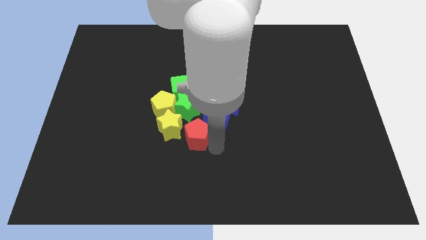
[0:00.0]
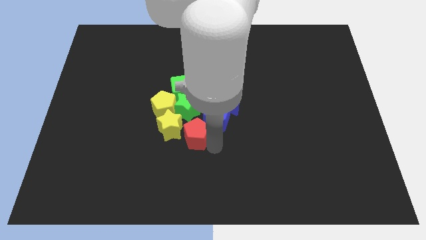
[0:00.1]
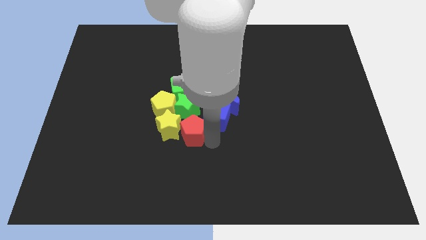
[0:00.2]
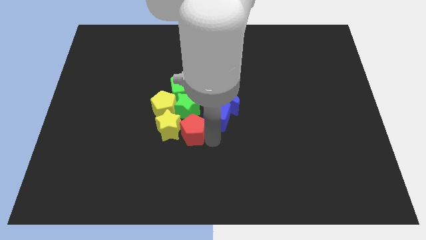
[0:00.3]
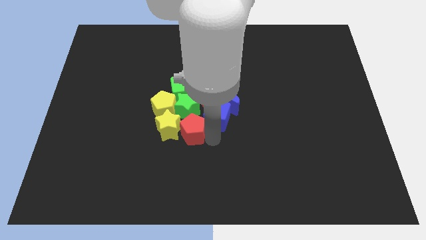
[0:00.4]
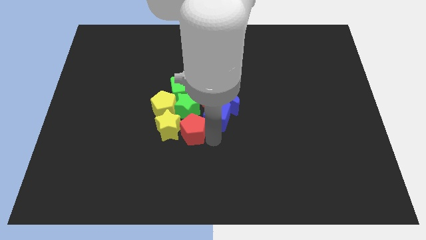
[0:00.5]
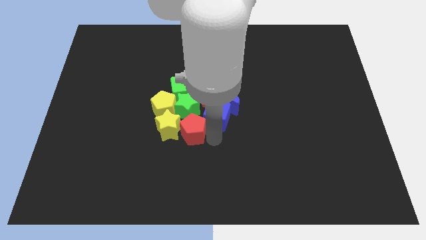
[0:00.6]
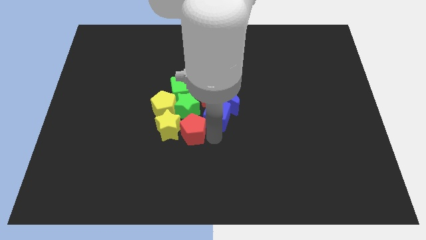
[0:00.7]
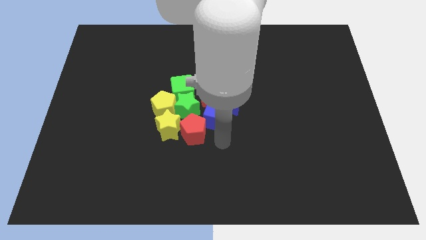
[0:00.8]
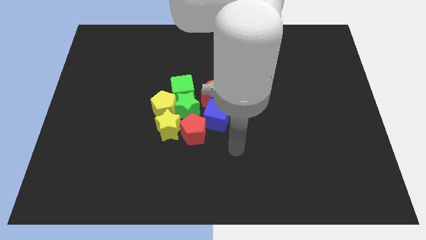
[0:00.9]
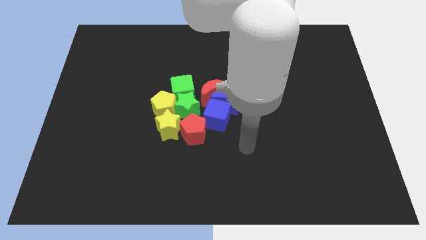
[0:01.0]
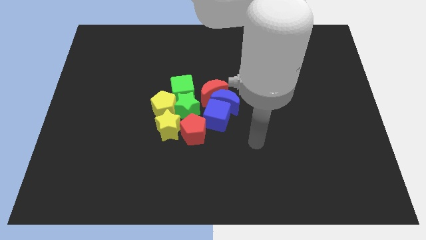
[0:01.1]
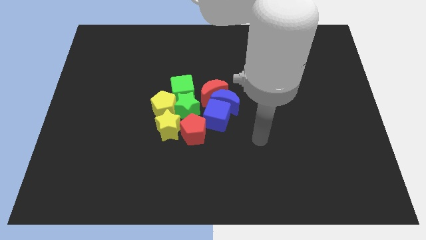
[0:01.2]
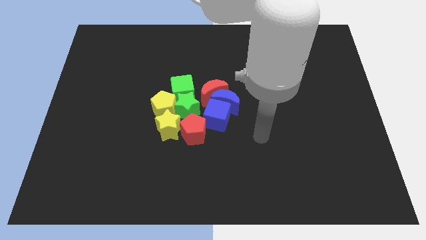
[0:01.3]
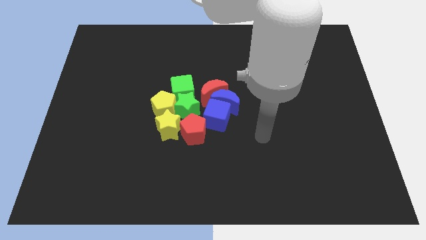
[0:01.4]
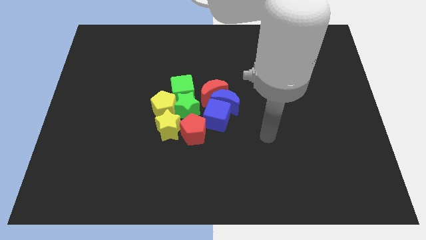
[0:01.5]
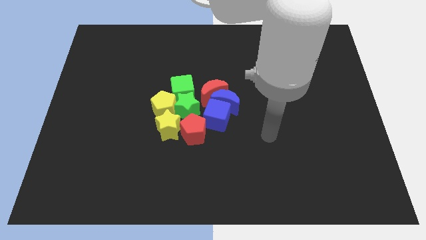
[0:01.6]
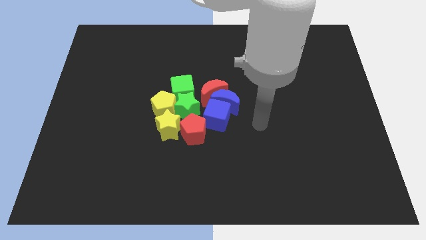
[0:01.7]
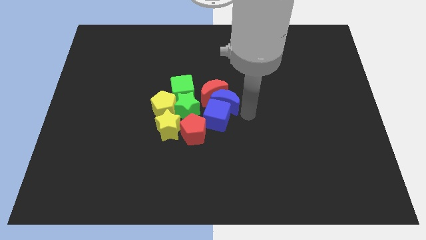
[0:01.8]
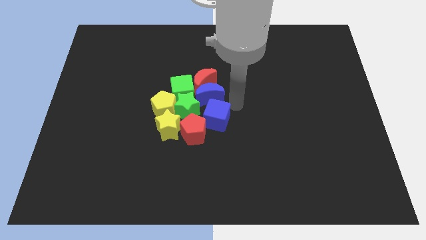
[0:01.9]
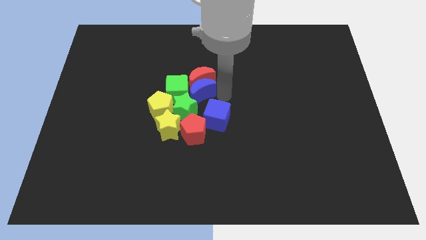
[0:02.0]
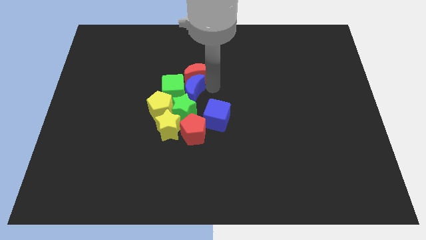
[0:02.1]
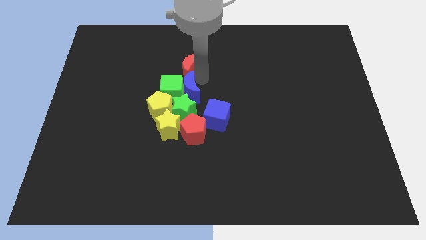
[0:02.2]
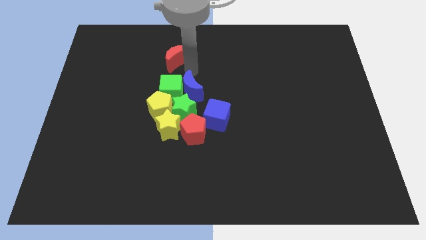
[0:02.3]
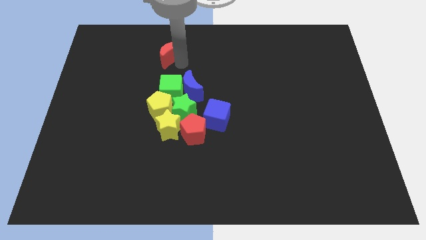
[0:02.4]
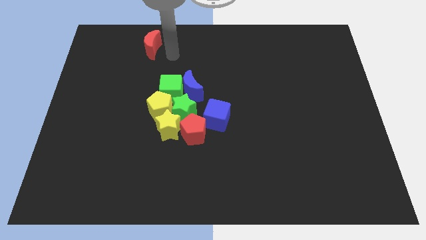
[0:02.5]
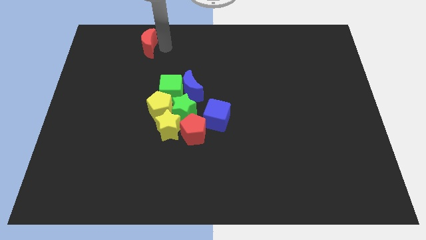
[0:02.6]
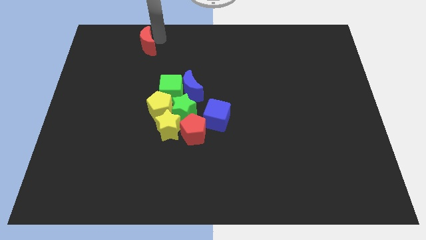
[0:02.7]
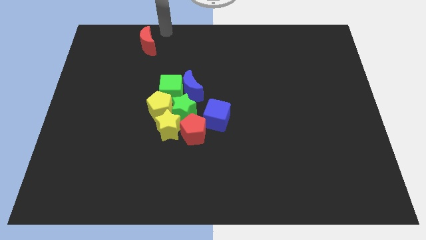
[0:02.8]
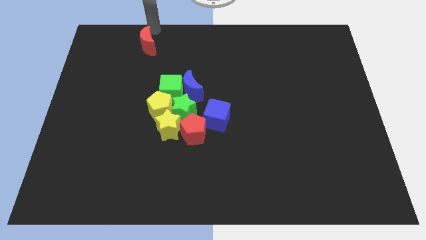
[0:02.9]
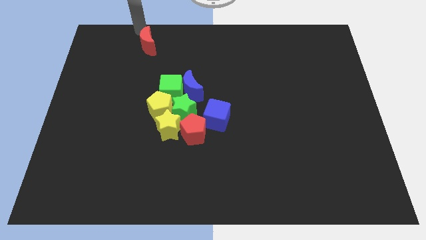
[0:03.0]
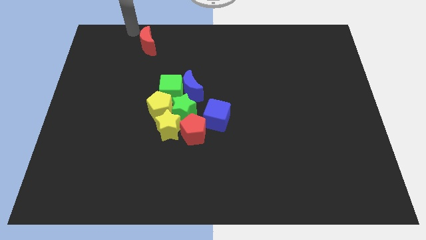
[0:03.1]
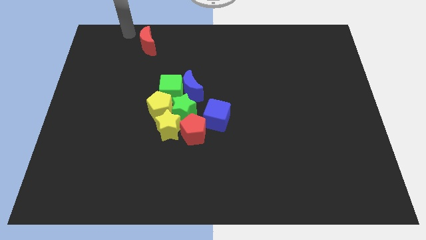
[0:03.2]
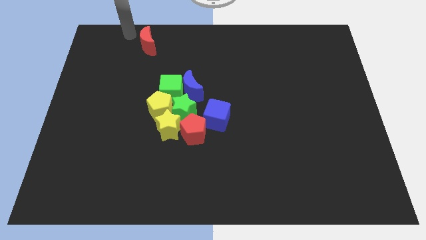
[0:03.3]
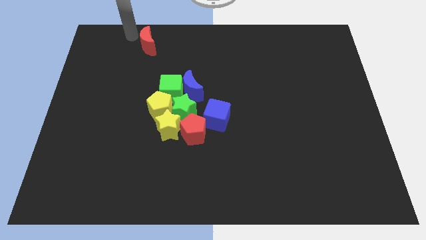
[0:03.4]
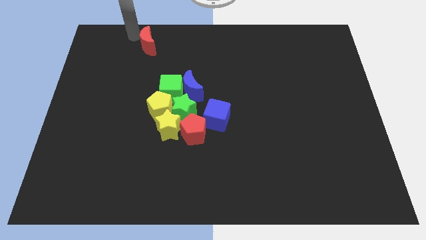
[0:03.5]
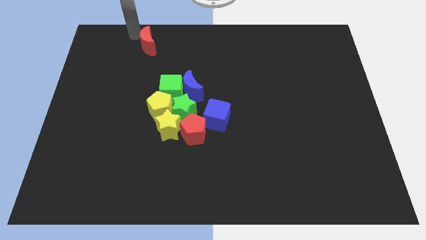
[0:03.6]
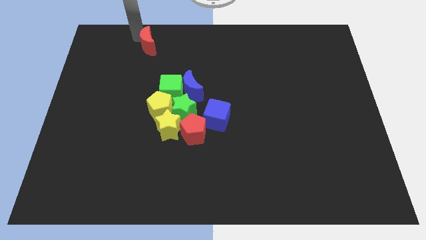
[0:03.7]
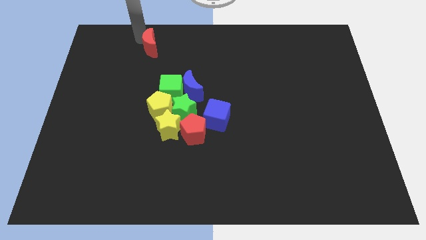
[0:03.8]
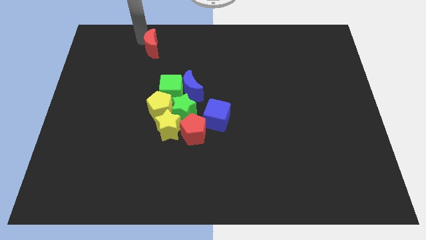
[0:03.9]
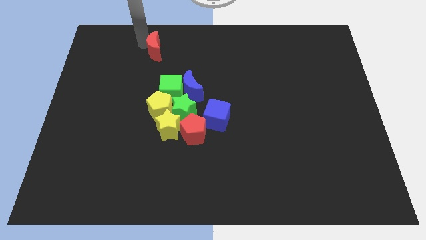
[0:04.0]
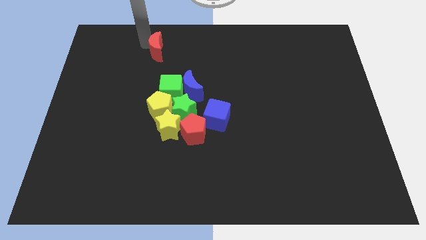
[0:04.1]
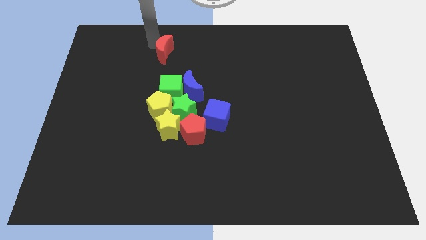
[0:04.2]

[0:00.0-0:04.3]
separate the red crescent from the group of blocks

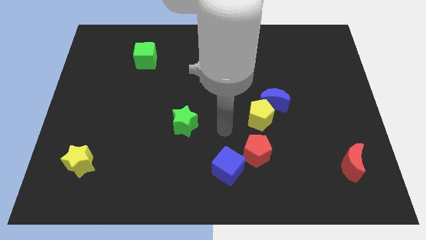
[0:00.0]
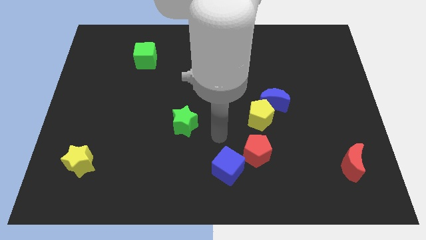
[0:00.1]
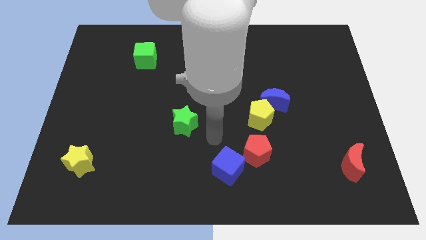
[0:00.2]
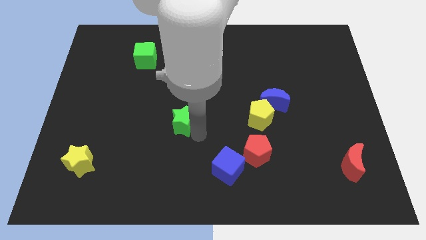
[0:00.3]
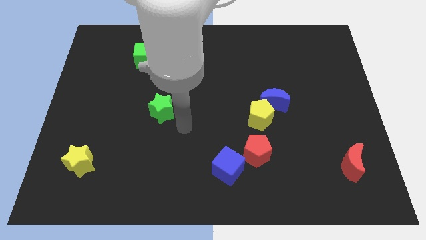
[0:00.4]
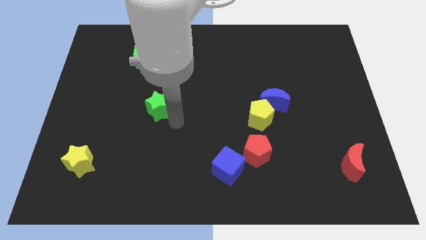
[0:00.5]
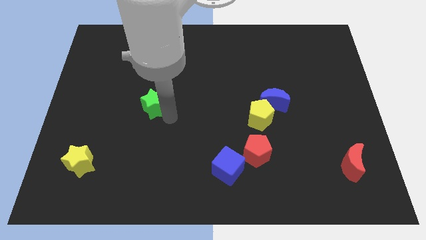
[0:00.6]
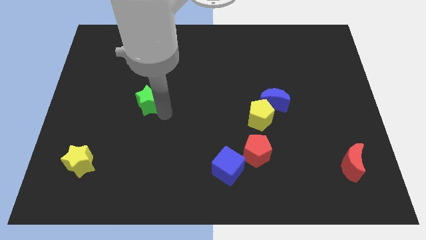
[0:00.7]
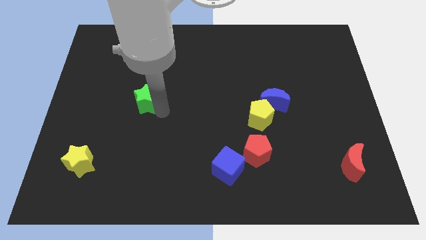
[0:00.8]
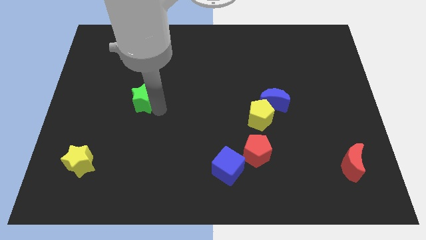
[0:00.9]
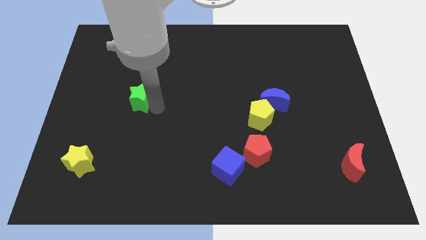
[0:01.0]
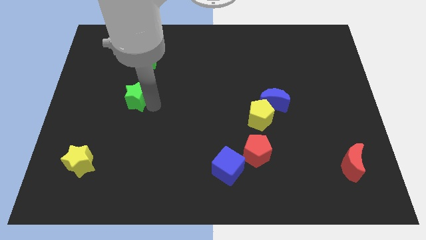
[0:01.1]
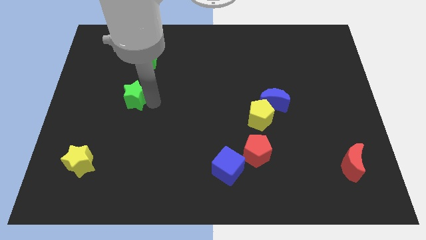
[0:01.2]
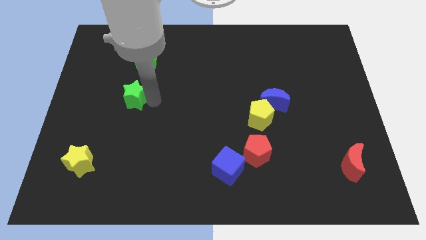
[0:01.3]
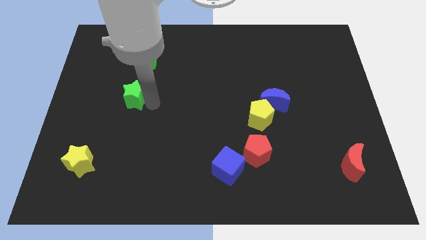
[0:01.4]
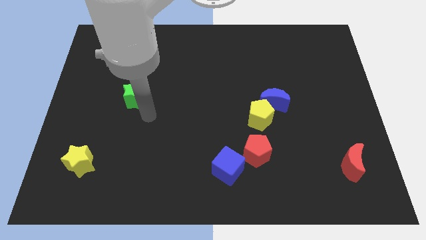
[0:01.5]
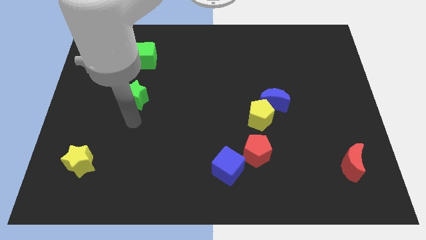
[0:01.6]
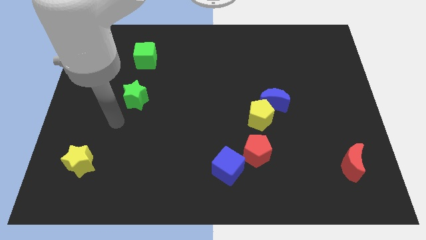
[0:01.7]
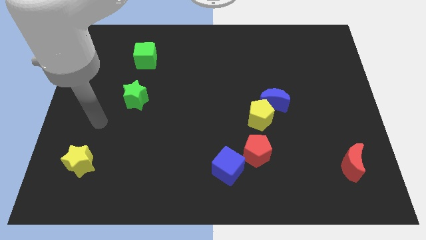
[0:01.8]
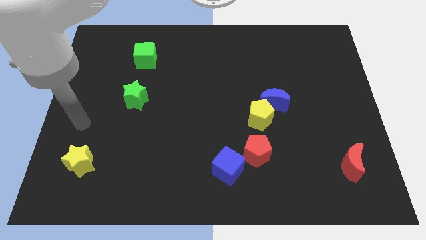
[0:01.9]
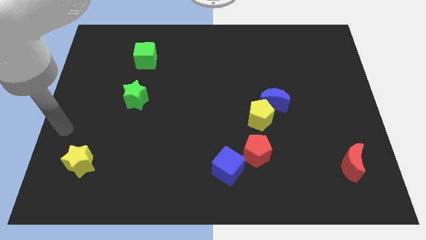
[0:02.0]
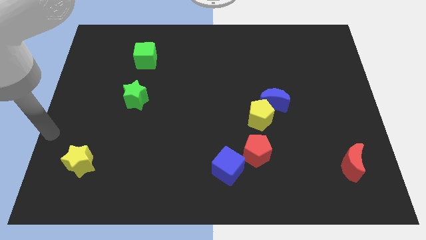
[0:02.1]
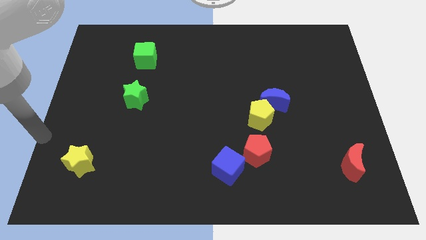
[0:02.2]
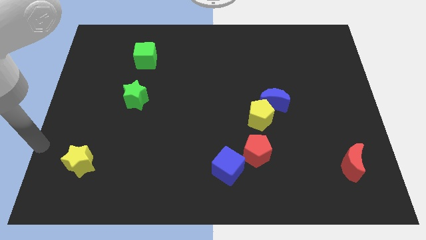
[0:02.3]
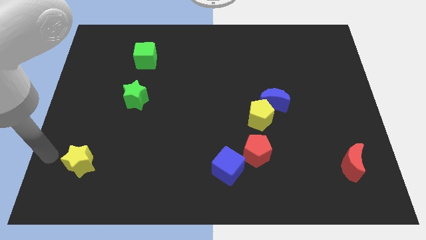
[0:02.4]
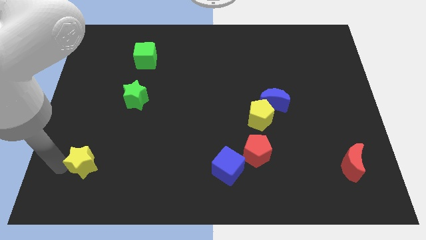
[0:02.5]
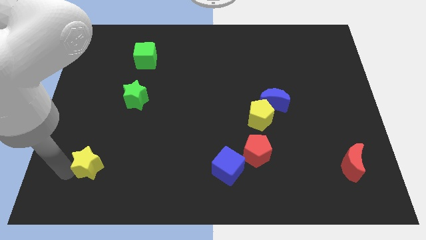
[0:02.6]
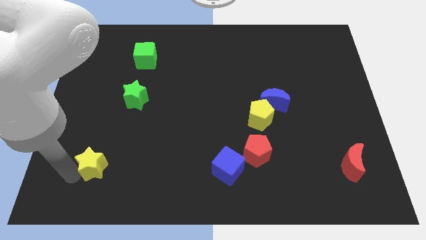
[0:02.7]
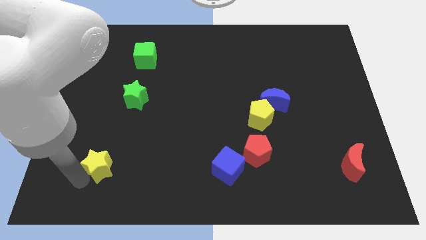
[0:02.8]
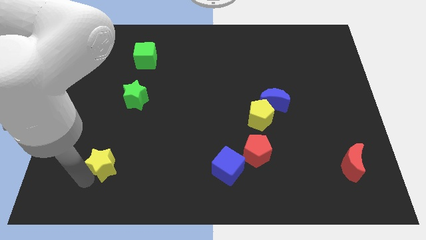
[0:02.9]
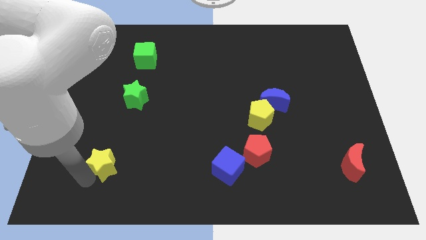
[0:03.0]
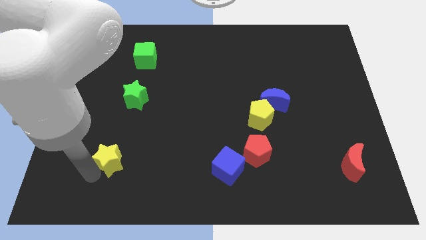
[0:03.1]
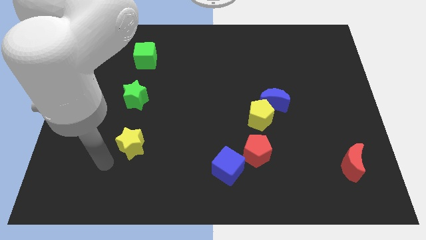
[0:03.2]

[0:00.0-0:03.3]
place the greens tar and yellow star diagonally to the bottom left side of the green cube

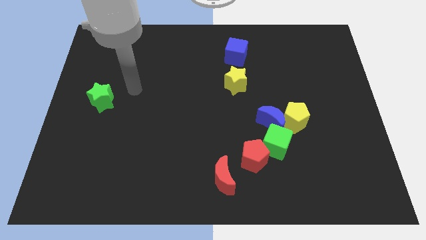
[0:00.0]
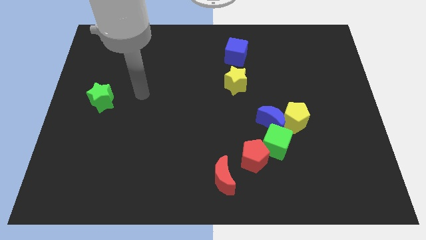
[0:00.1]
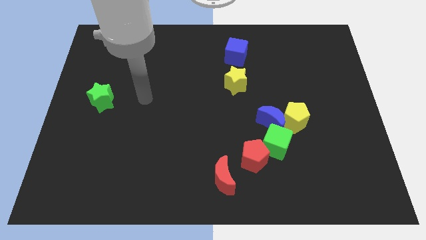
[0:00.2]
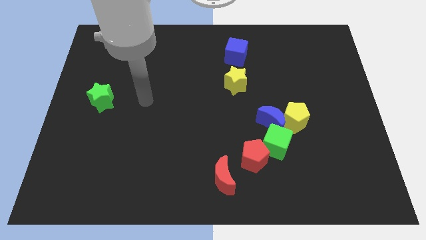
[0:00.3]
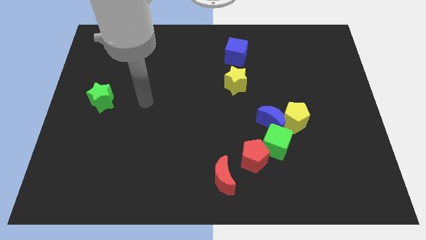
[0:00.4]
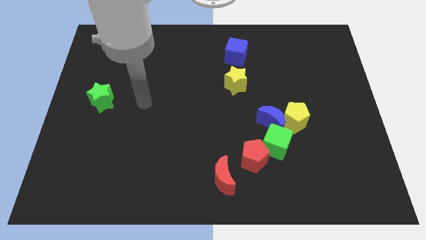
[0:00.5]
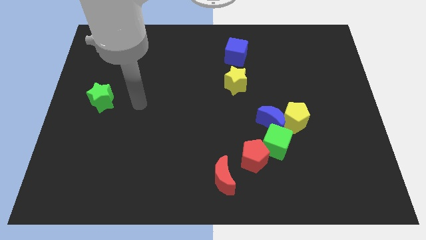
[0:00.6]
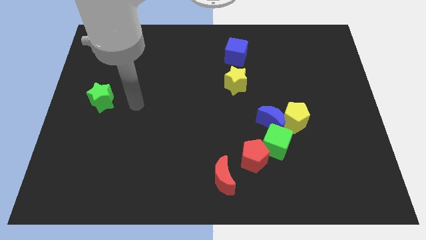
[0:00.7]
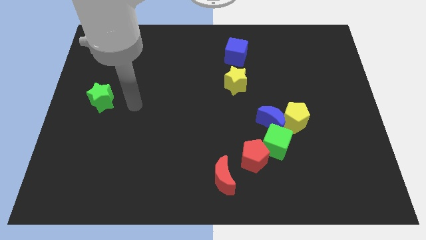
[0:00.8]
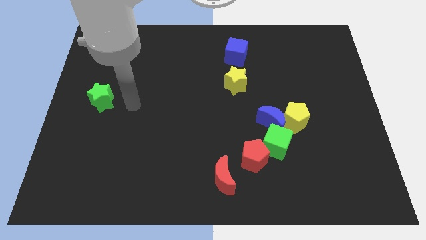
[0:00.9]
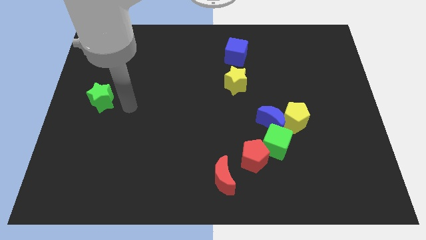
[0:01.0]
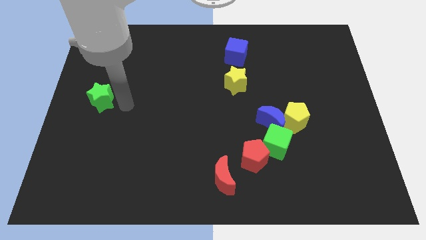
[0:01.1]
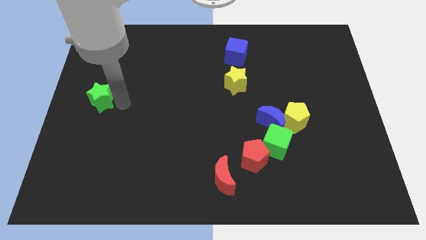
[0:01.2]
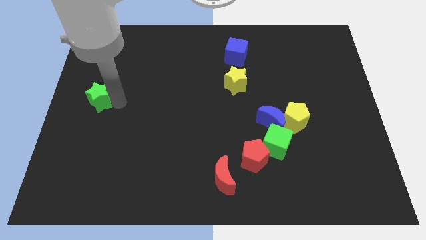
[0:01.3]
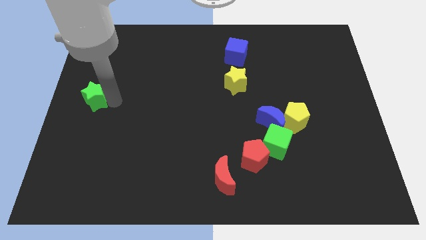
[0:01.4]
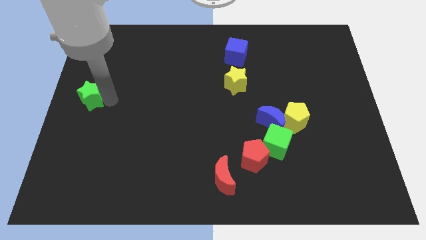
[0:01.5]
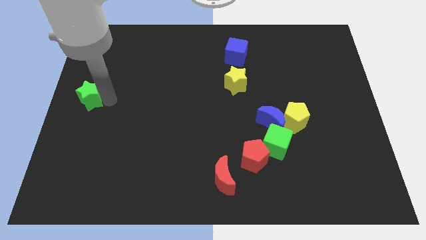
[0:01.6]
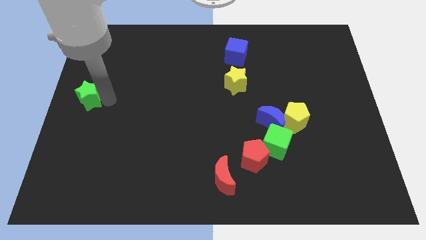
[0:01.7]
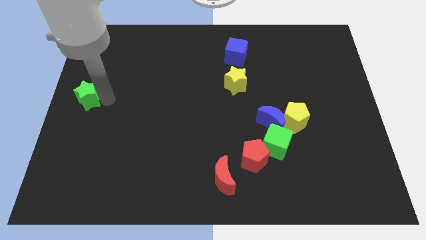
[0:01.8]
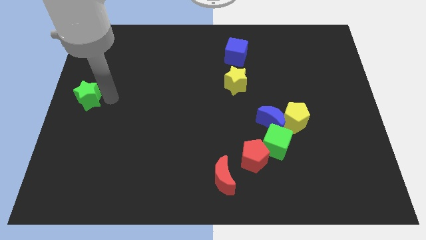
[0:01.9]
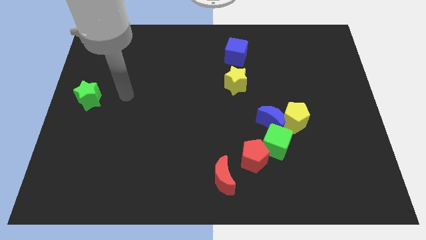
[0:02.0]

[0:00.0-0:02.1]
push the green star to the left center of the board
